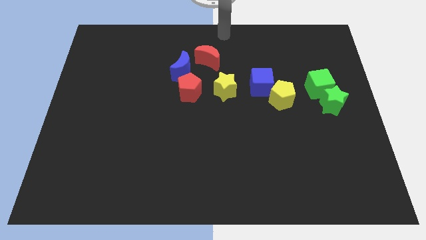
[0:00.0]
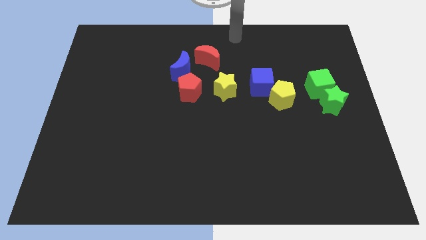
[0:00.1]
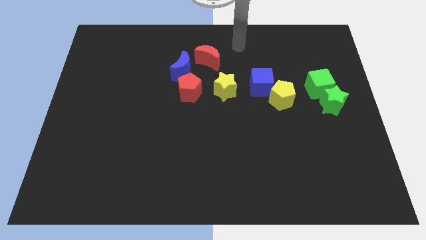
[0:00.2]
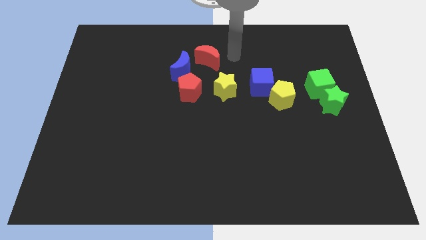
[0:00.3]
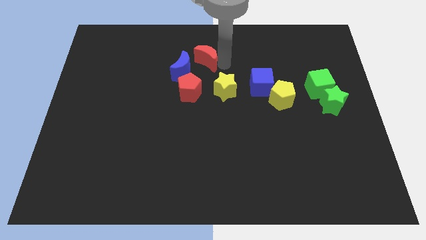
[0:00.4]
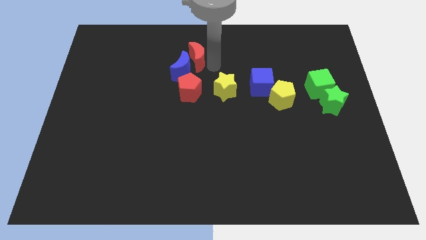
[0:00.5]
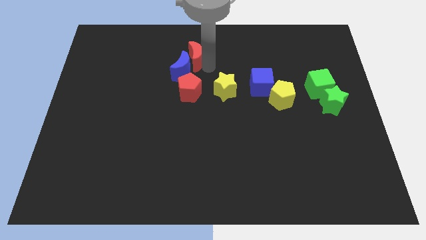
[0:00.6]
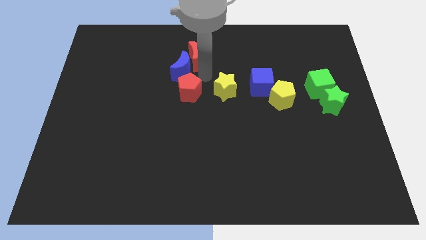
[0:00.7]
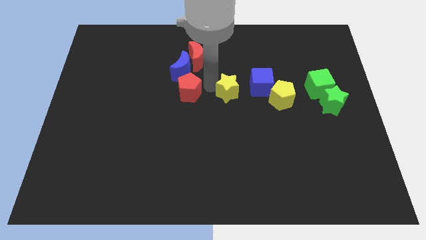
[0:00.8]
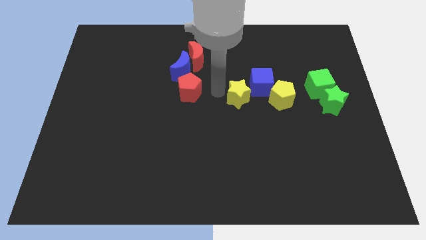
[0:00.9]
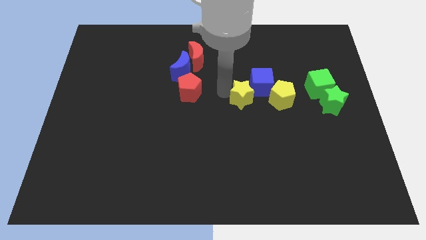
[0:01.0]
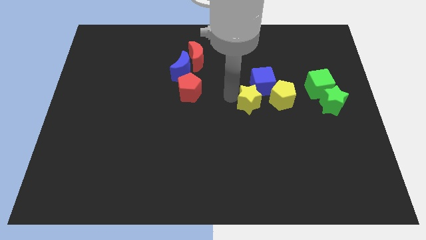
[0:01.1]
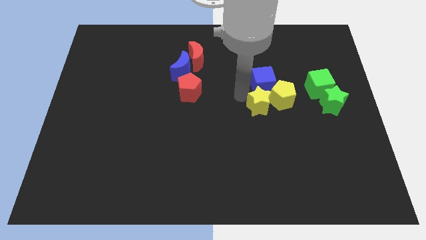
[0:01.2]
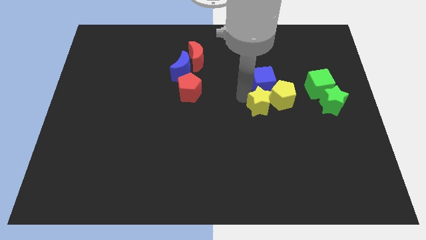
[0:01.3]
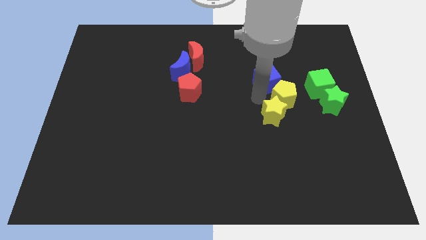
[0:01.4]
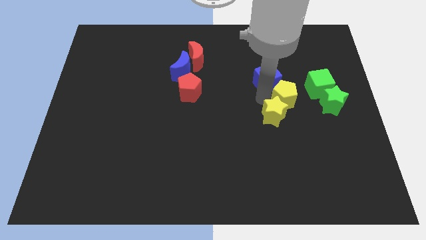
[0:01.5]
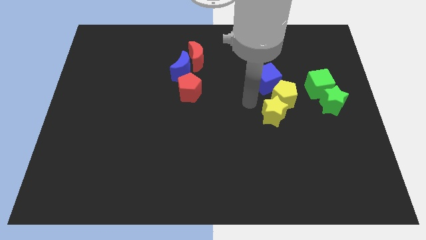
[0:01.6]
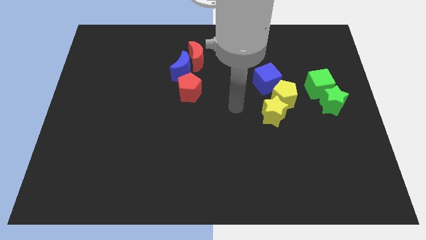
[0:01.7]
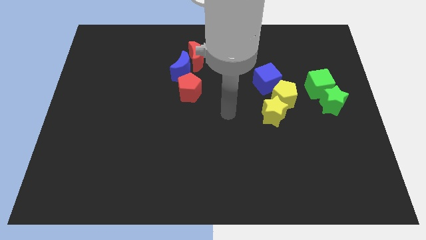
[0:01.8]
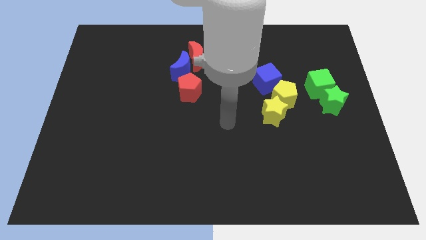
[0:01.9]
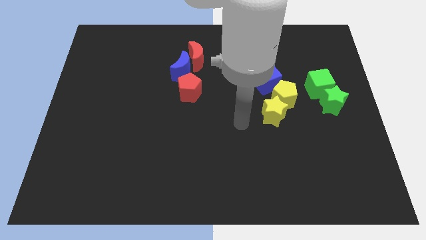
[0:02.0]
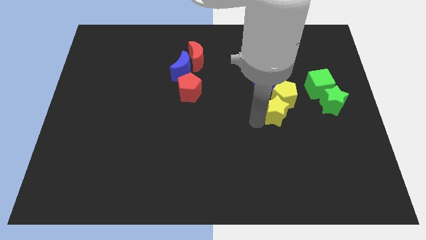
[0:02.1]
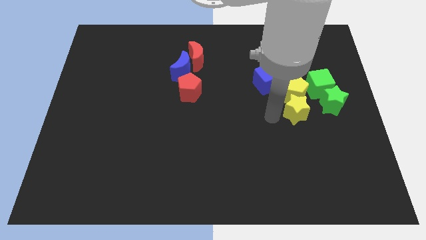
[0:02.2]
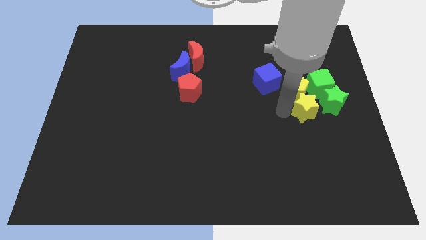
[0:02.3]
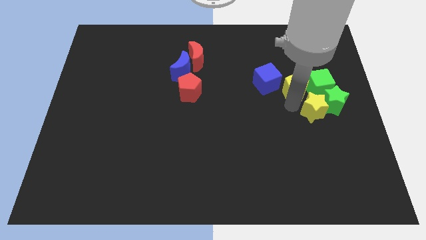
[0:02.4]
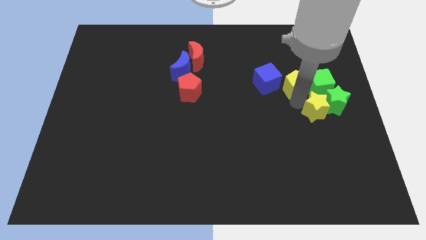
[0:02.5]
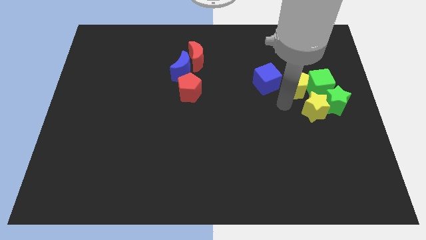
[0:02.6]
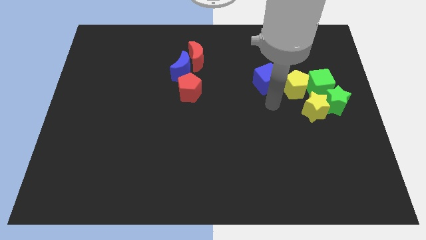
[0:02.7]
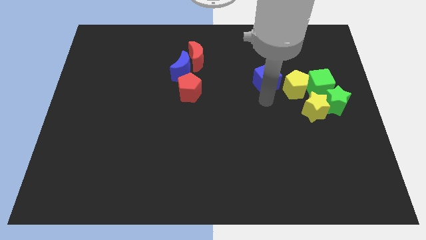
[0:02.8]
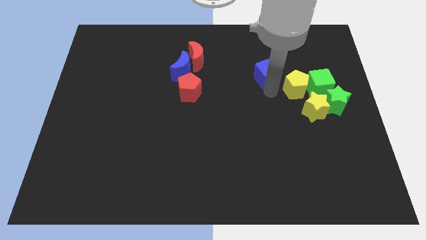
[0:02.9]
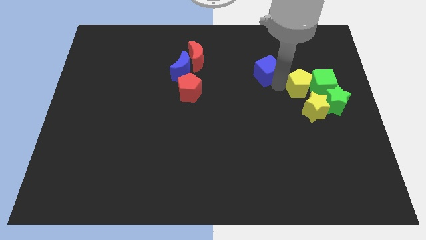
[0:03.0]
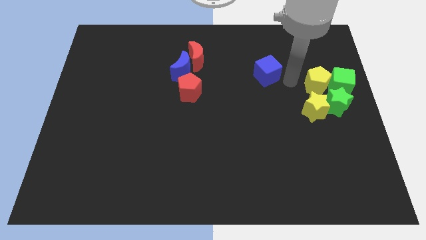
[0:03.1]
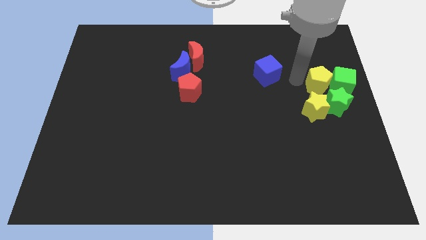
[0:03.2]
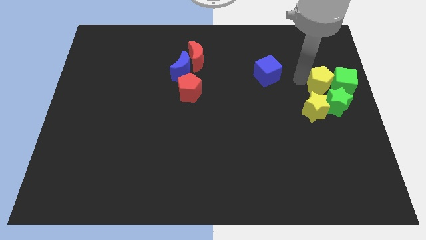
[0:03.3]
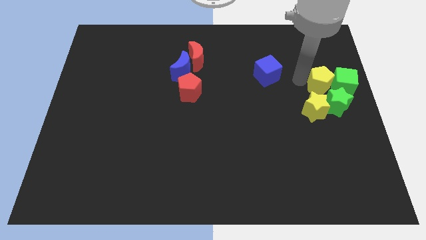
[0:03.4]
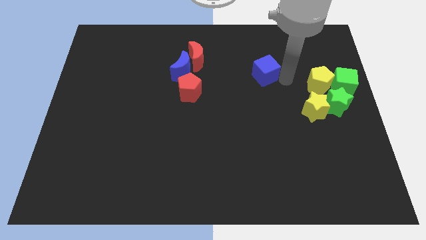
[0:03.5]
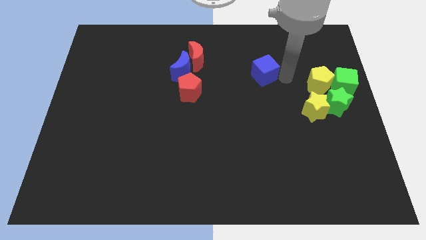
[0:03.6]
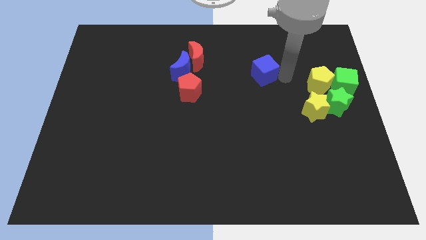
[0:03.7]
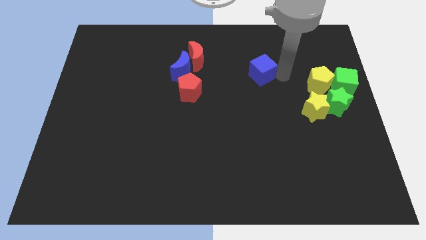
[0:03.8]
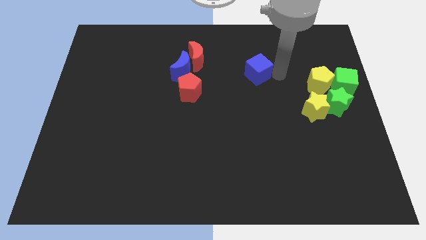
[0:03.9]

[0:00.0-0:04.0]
push the yellow star into the yellow pentagon

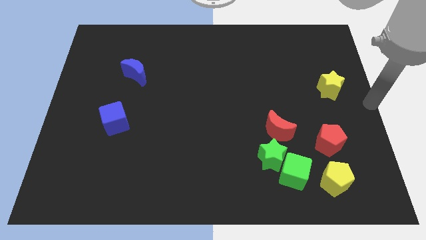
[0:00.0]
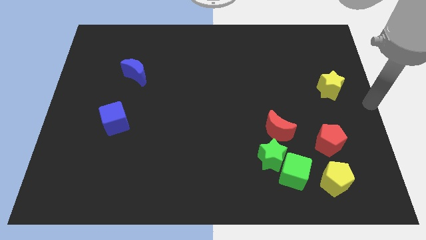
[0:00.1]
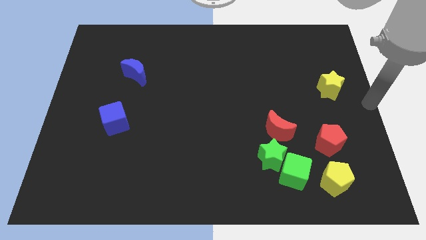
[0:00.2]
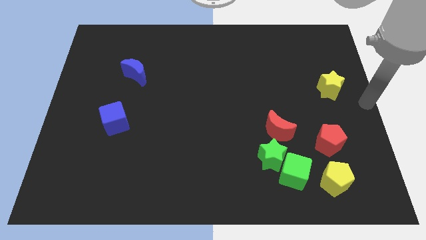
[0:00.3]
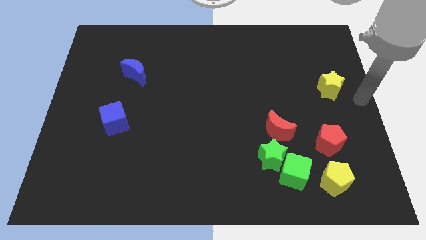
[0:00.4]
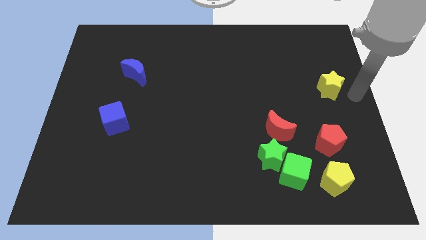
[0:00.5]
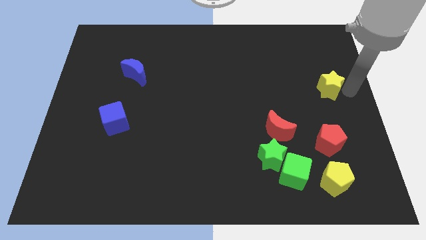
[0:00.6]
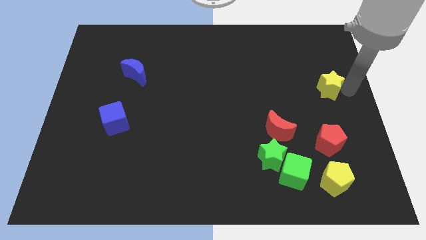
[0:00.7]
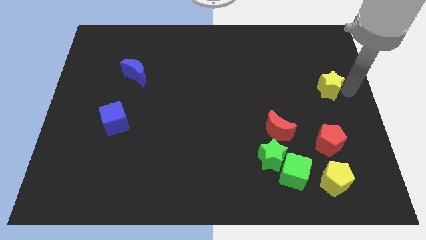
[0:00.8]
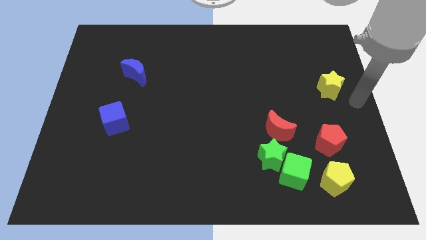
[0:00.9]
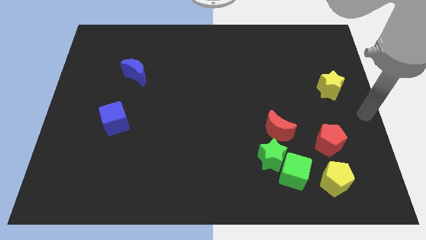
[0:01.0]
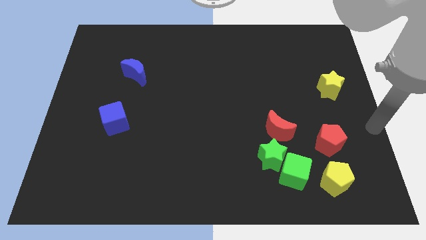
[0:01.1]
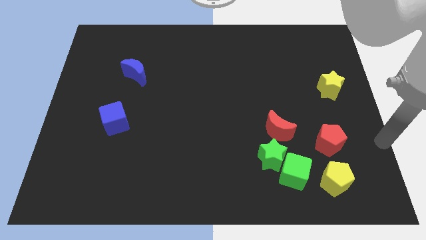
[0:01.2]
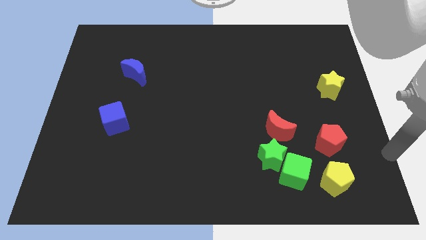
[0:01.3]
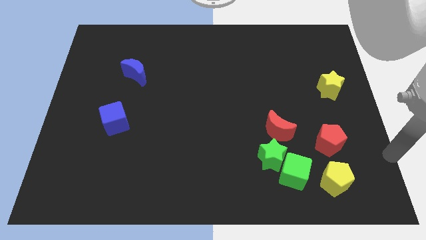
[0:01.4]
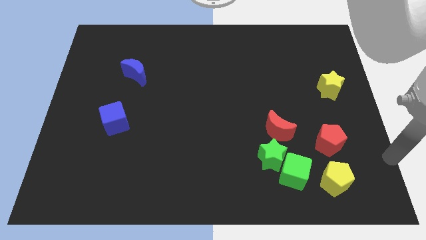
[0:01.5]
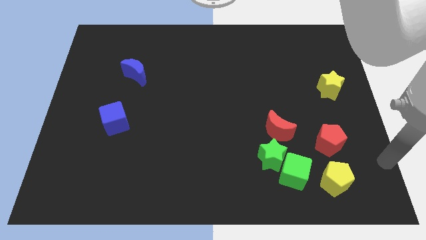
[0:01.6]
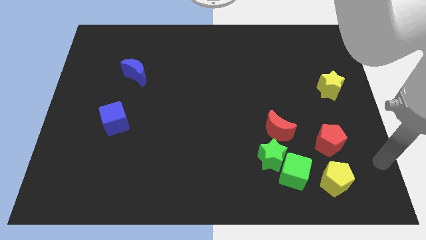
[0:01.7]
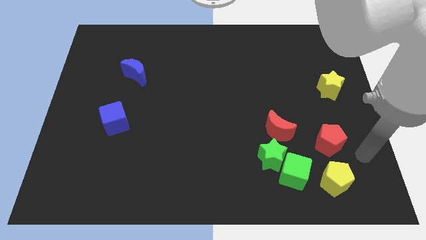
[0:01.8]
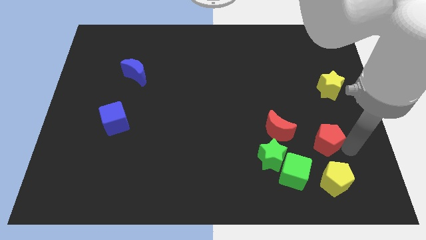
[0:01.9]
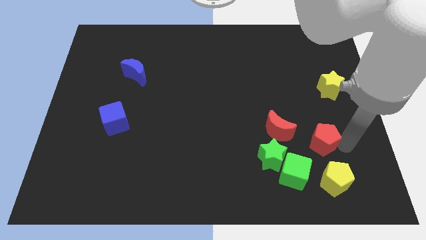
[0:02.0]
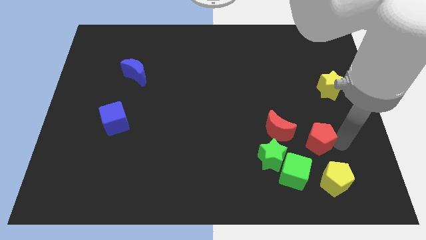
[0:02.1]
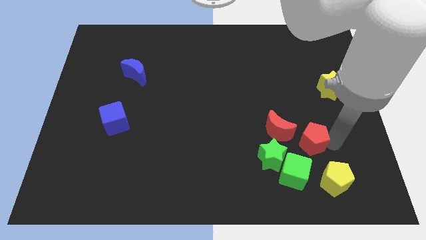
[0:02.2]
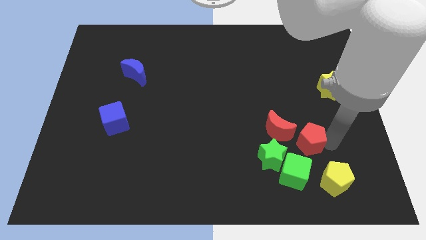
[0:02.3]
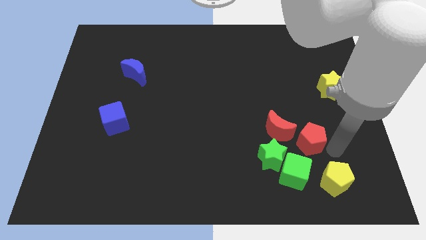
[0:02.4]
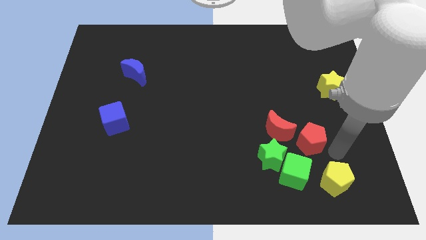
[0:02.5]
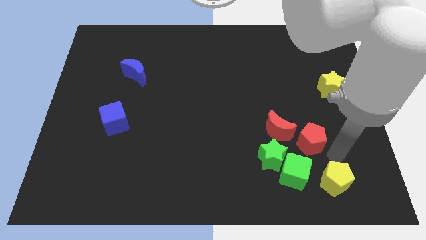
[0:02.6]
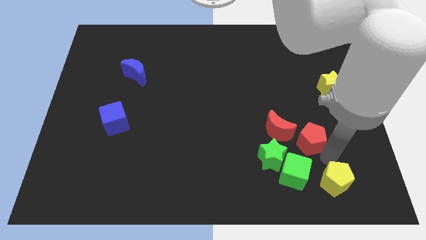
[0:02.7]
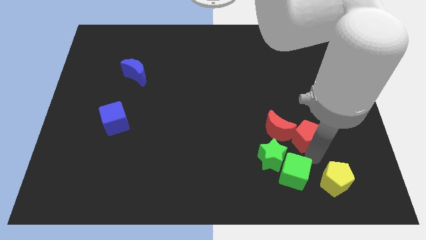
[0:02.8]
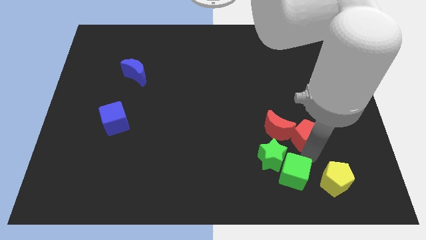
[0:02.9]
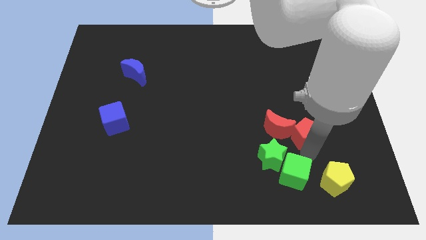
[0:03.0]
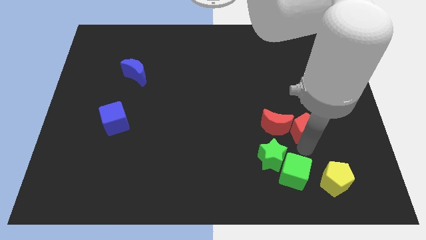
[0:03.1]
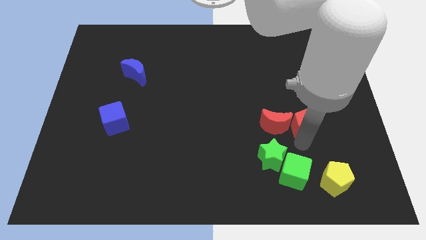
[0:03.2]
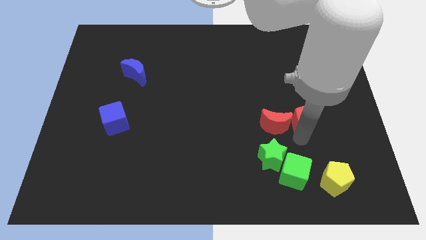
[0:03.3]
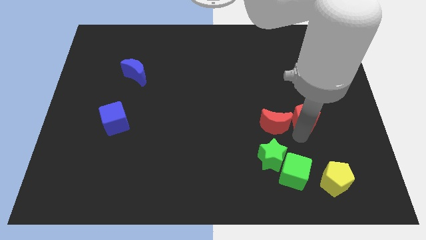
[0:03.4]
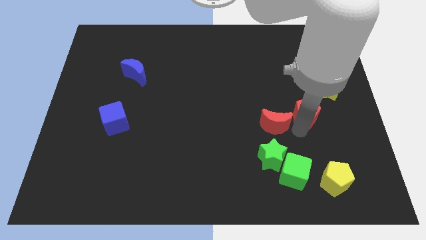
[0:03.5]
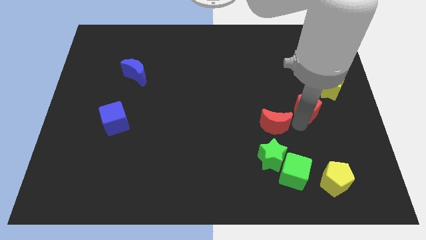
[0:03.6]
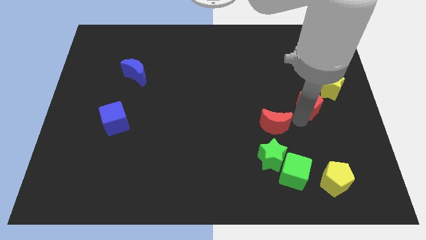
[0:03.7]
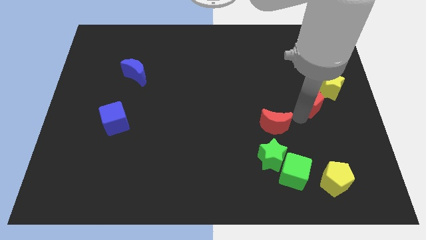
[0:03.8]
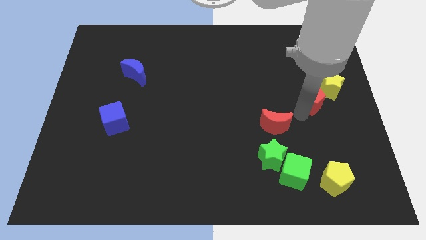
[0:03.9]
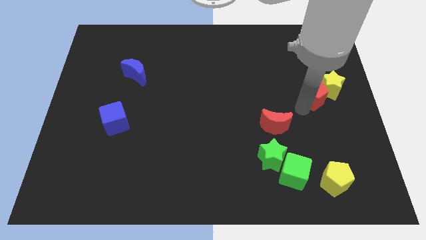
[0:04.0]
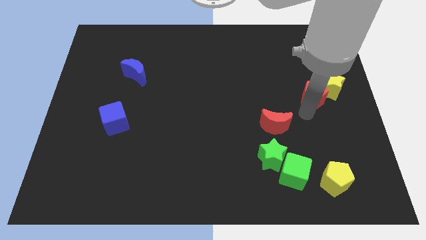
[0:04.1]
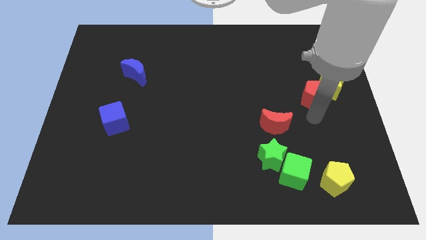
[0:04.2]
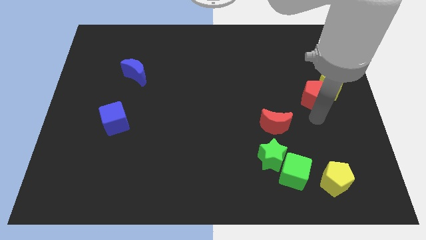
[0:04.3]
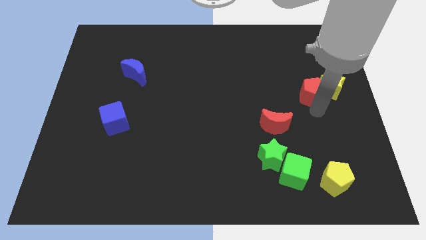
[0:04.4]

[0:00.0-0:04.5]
slightly move the red pentagon towards top

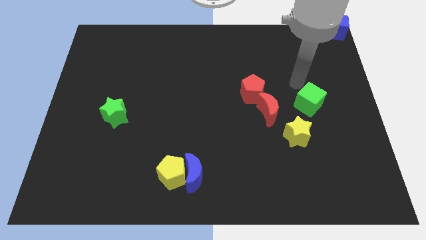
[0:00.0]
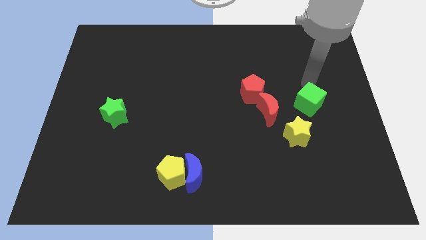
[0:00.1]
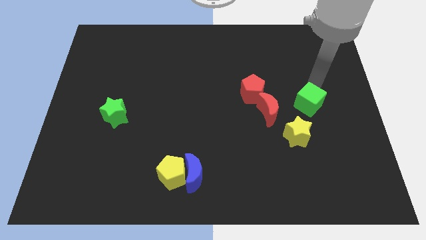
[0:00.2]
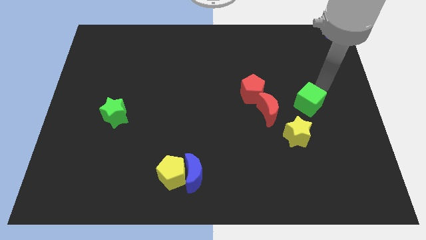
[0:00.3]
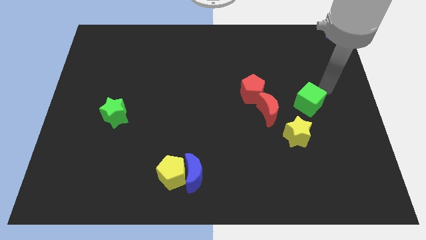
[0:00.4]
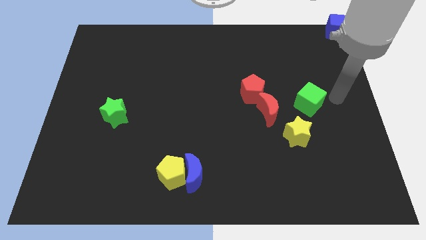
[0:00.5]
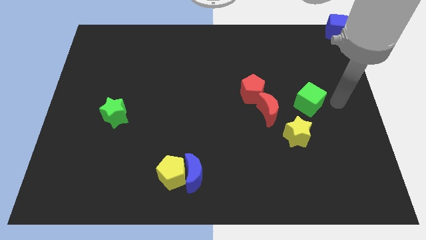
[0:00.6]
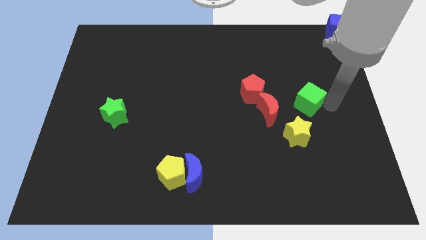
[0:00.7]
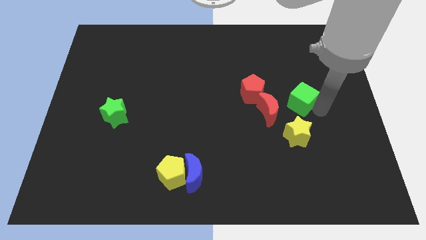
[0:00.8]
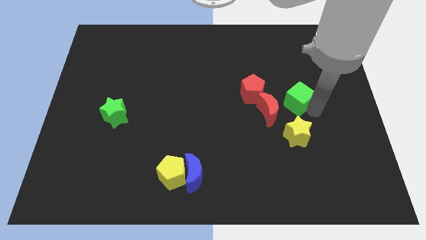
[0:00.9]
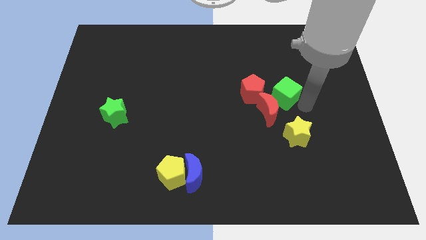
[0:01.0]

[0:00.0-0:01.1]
push the green cube towards the red blocks
